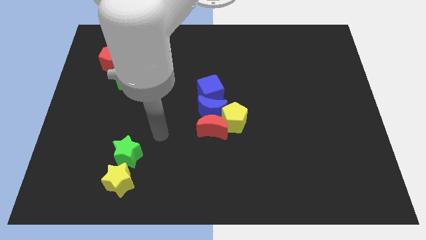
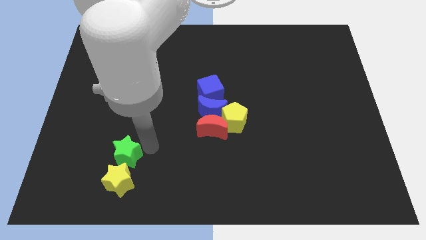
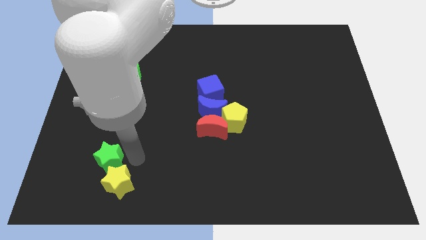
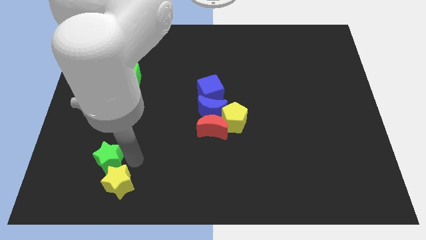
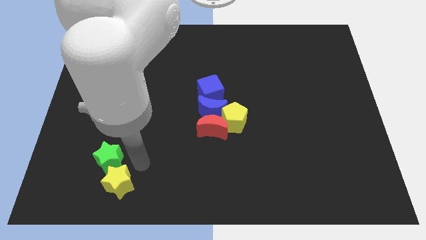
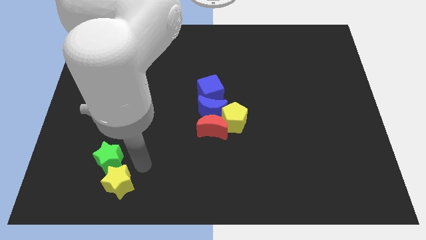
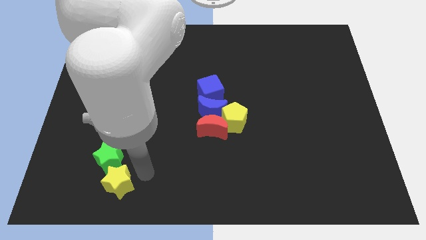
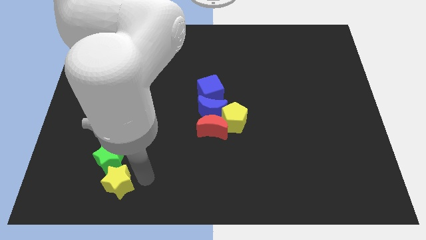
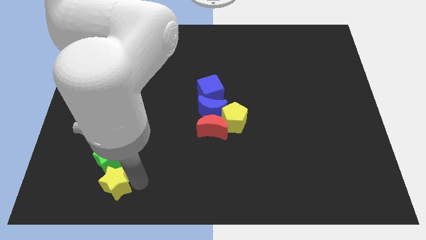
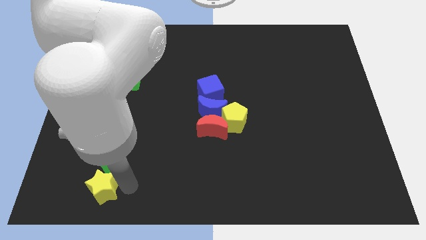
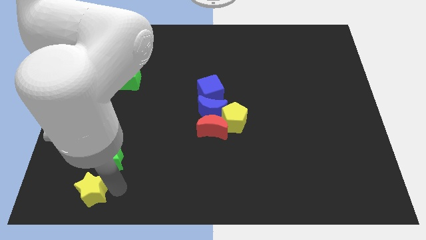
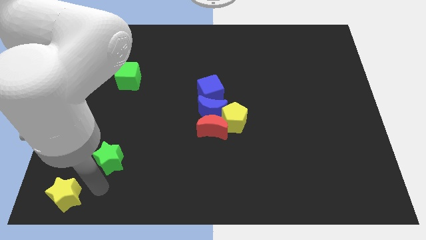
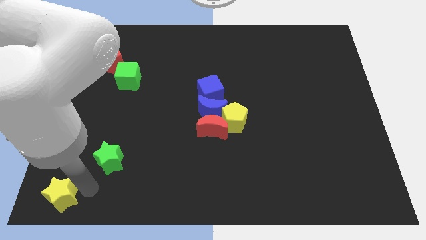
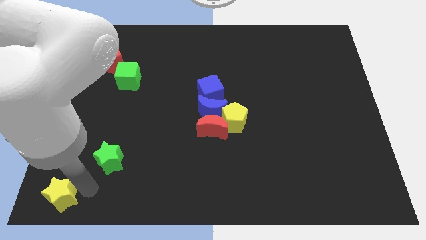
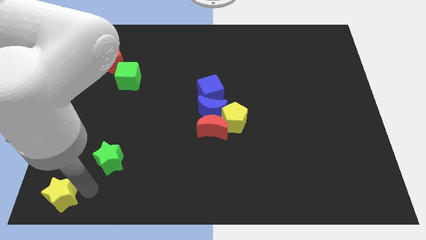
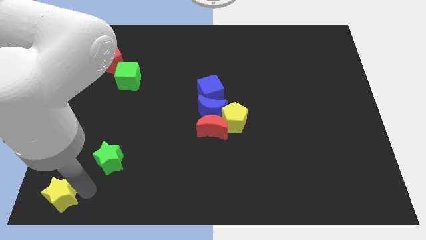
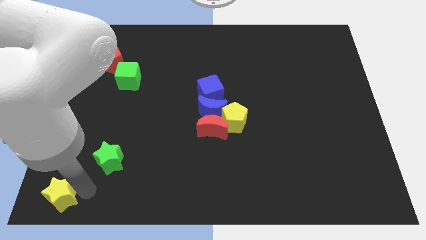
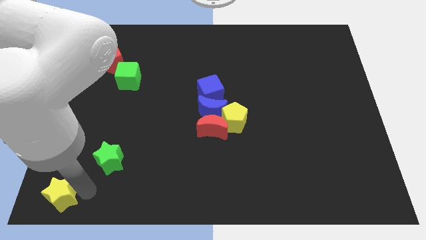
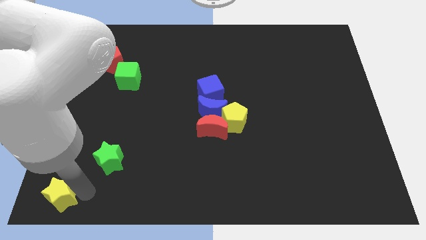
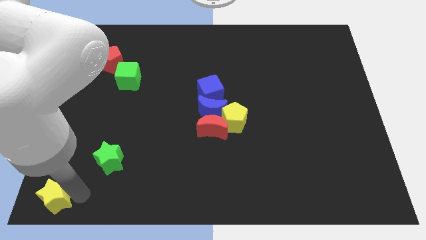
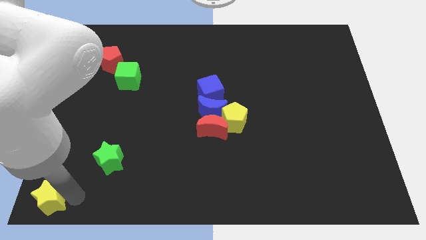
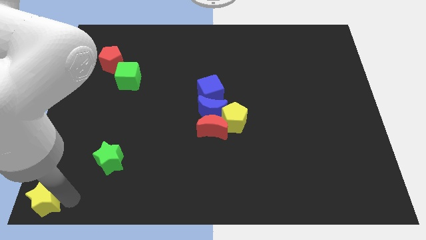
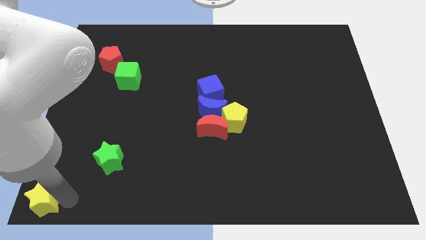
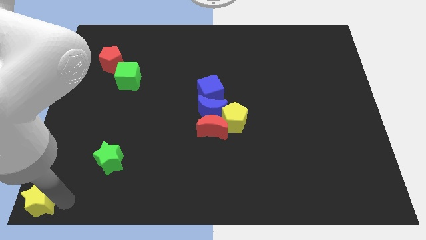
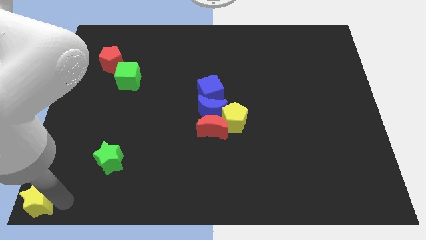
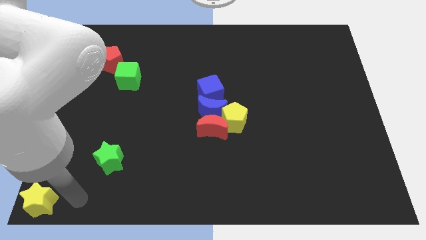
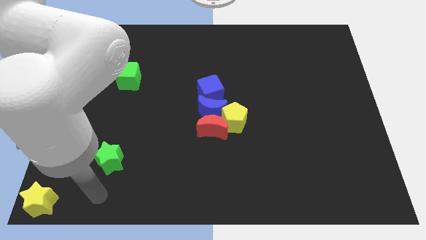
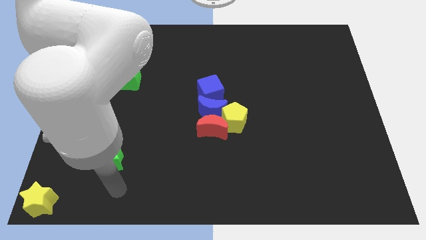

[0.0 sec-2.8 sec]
separate the yellow star to the bottom left corner

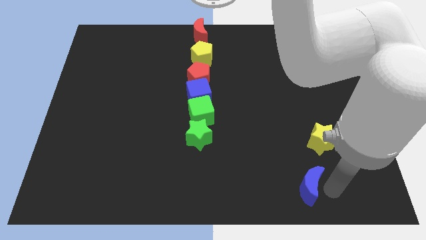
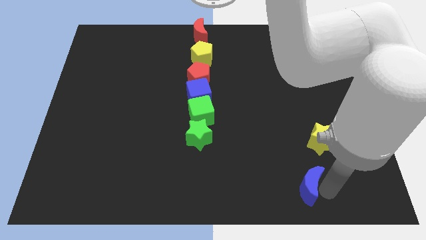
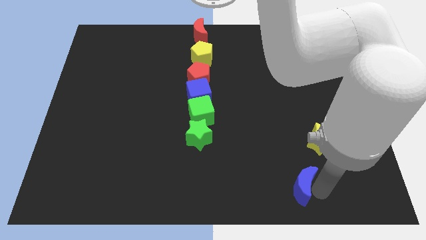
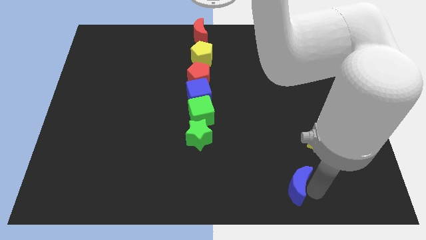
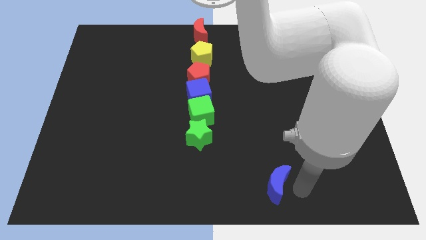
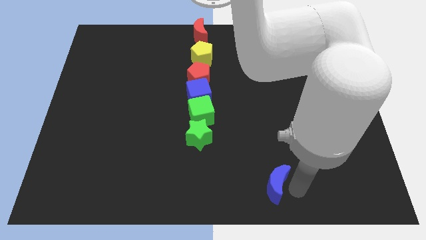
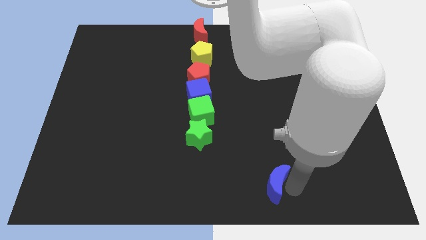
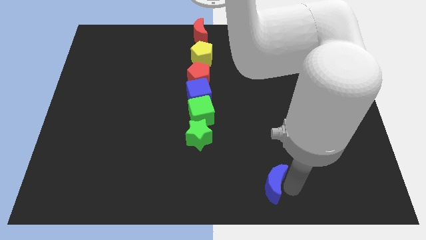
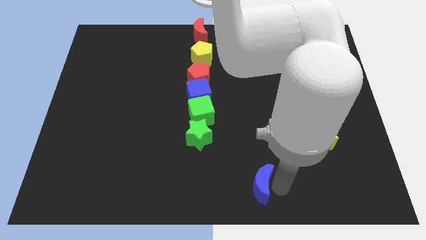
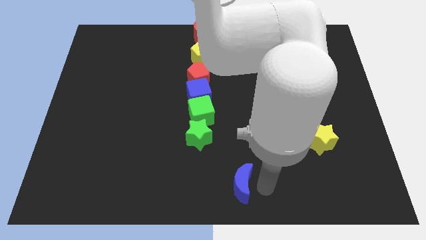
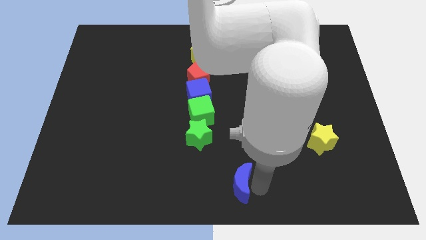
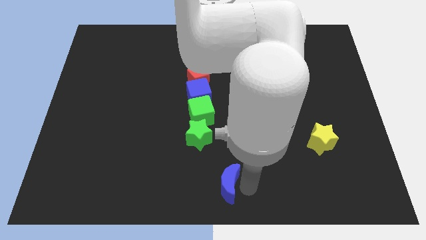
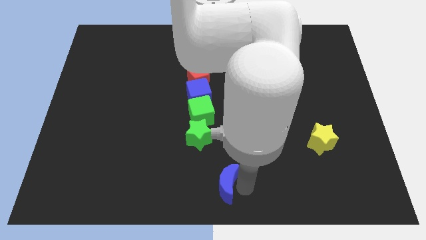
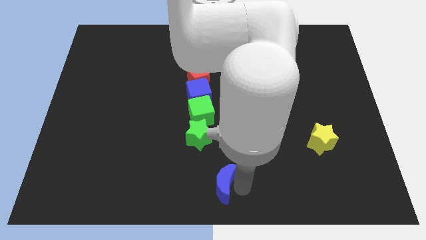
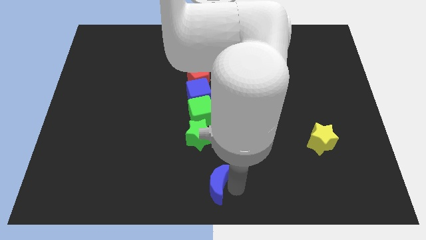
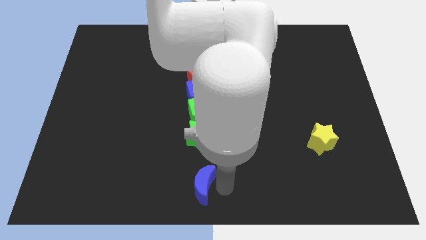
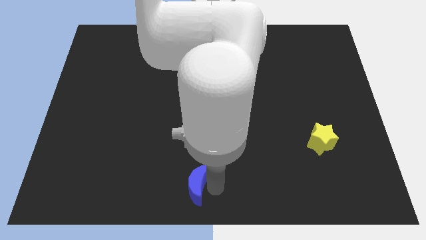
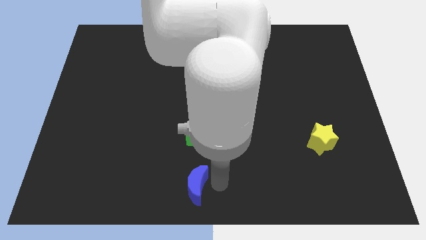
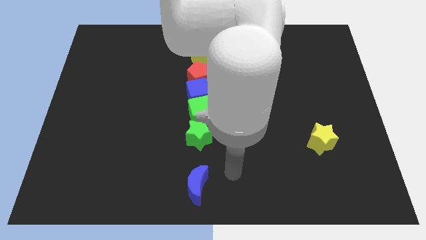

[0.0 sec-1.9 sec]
move the blue crescent below the green star

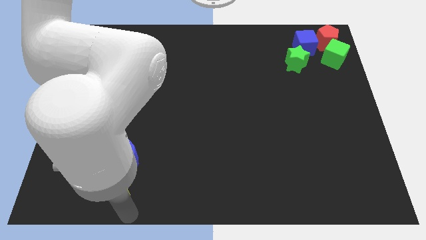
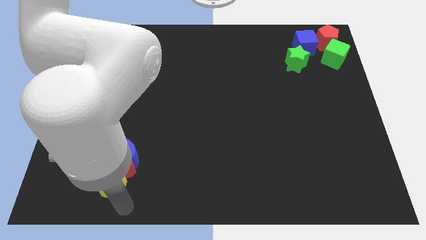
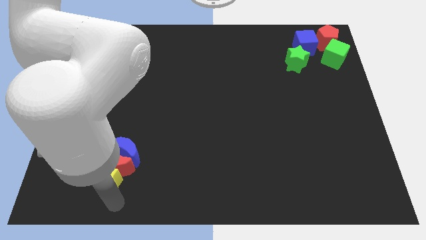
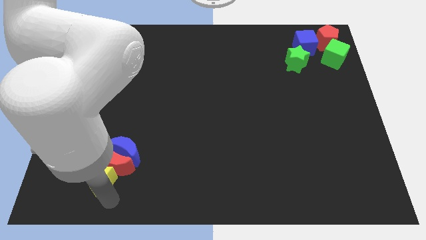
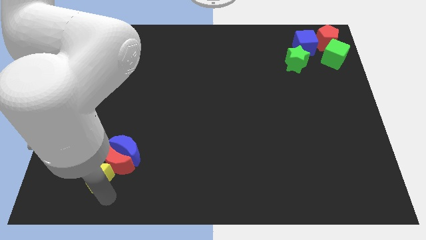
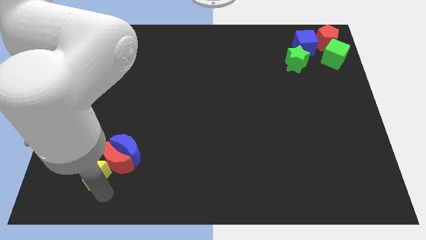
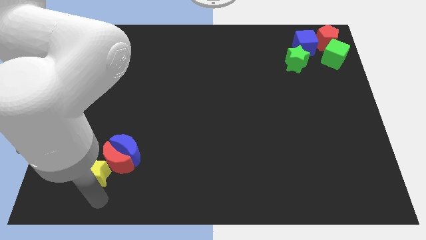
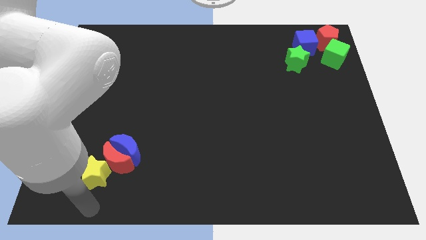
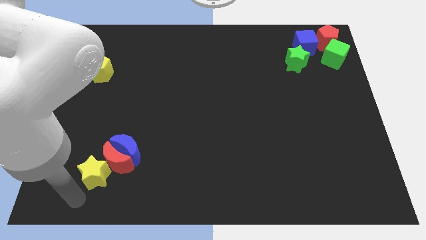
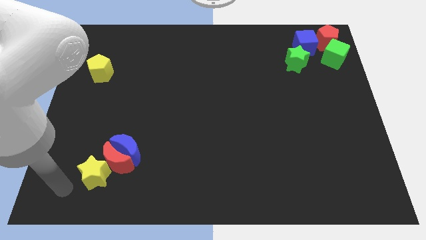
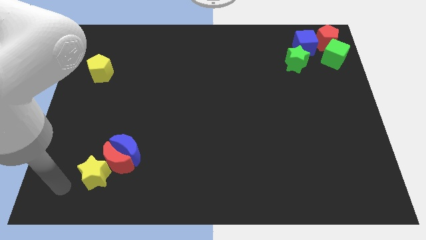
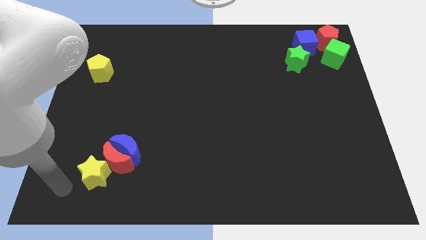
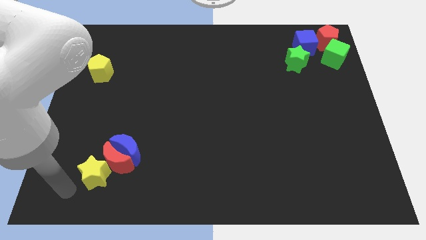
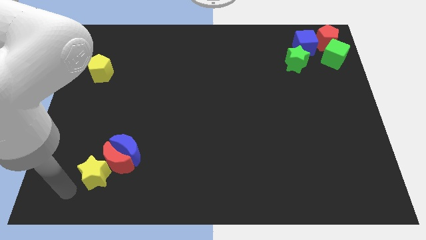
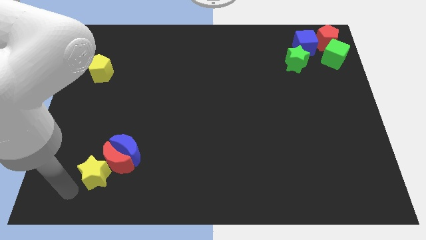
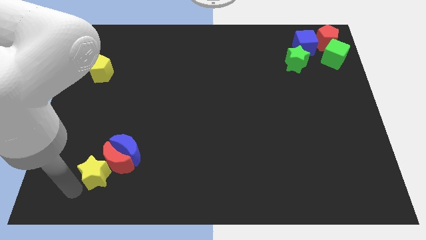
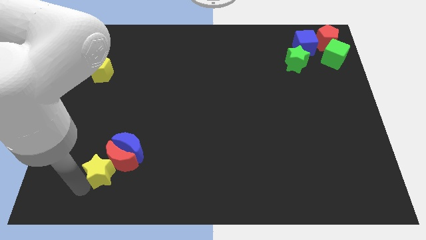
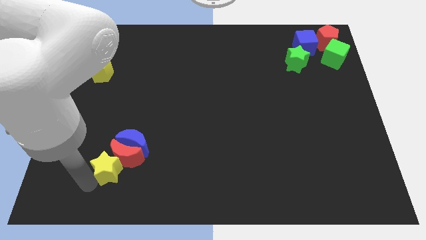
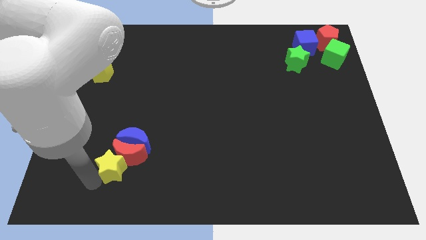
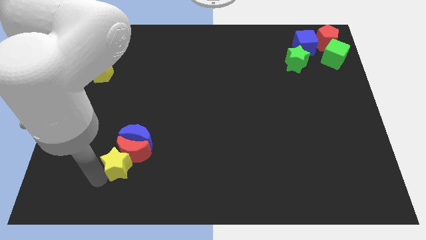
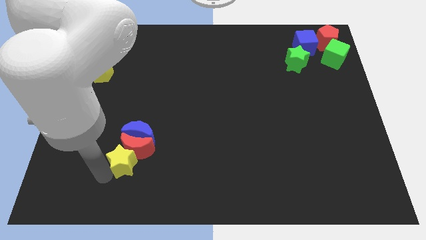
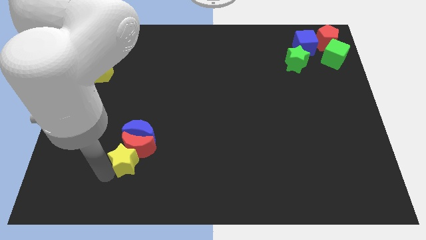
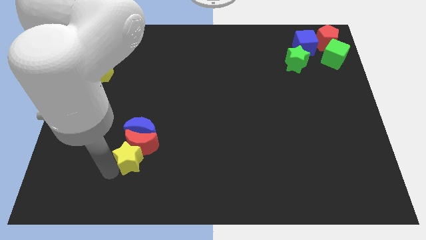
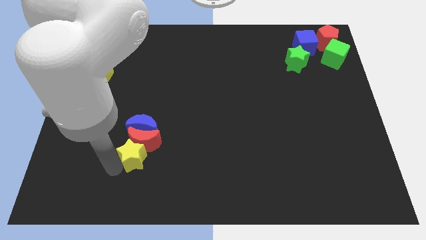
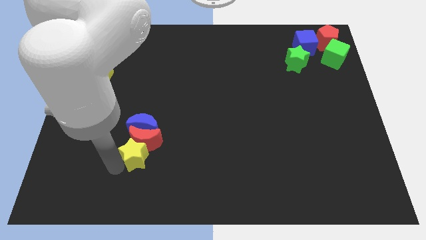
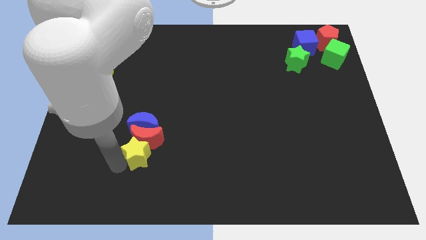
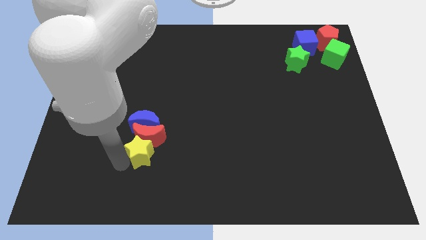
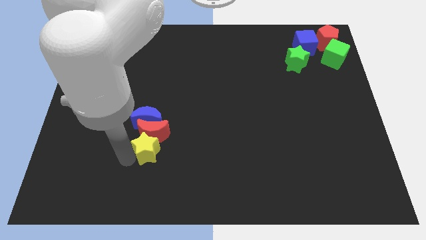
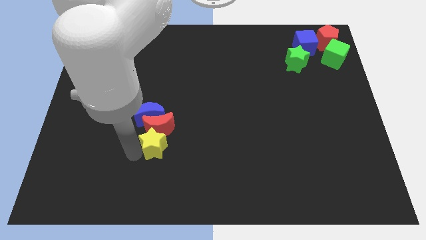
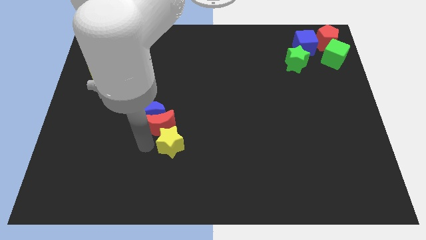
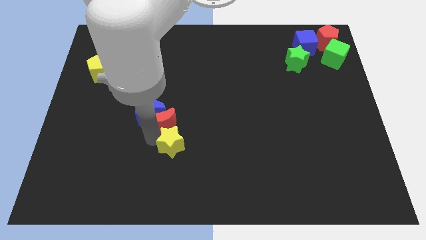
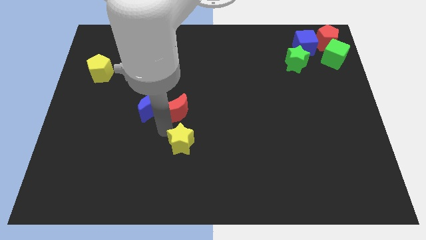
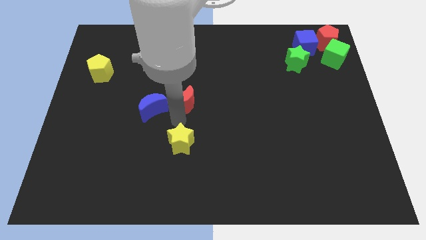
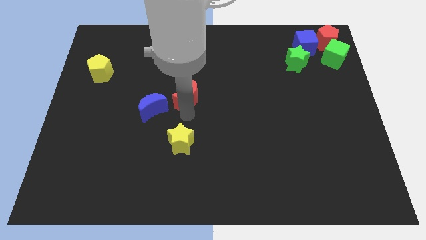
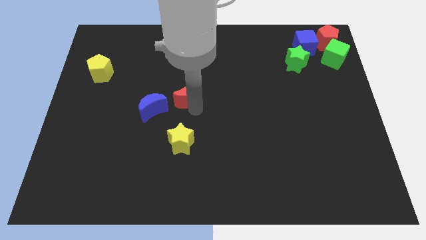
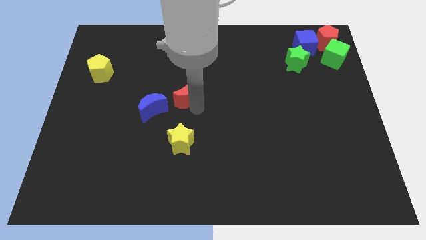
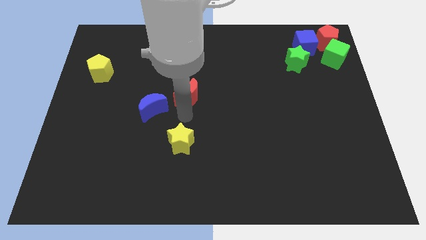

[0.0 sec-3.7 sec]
move red crescent towards center

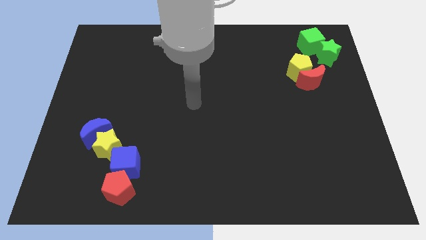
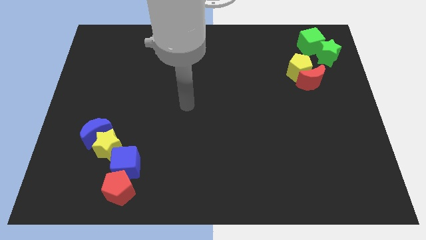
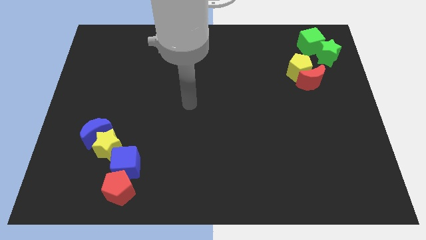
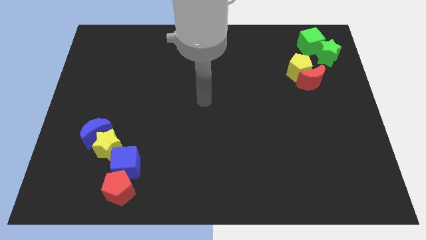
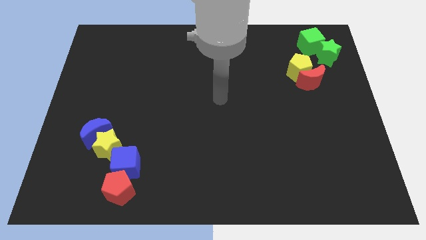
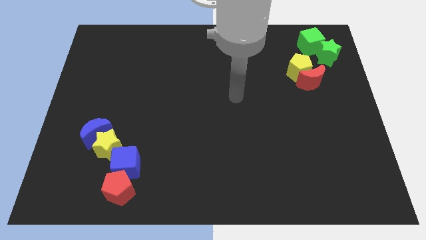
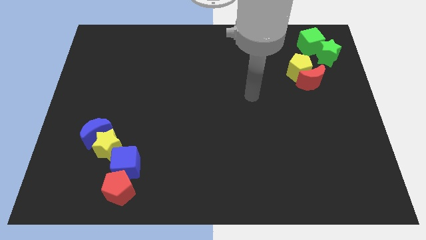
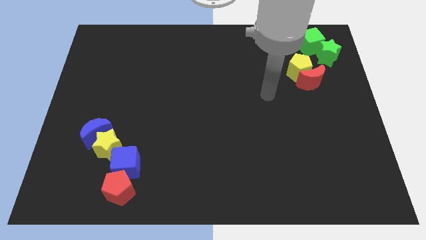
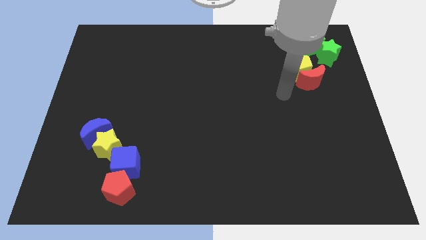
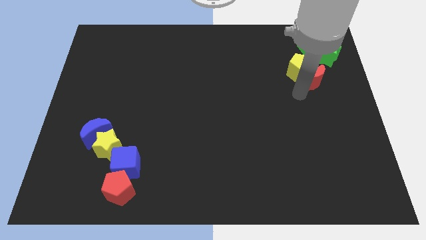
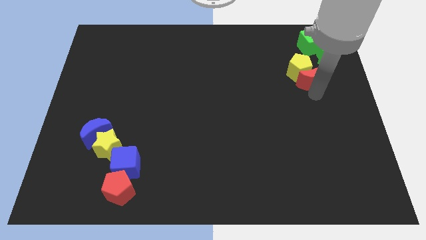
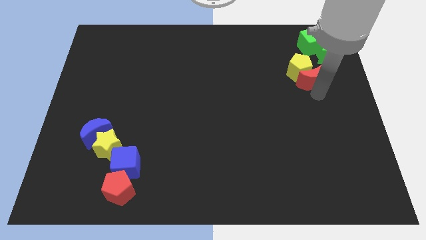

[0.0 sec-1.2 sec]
point your arm at the bottom of the red crescent
